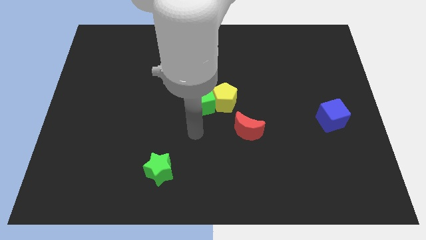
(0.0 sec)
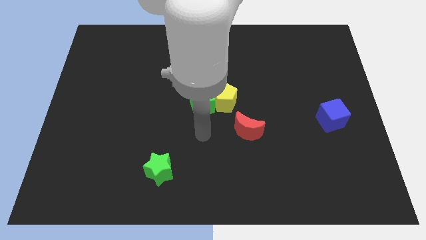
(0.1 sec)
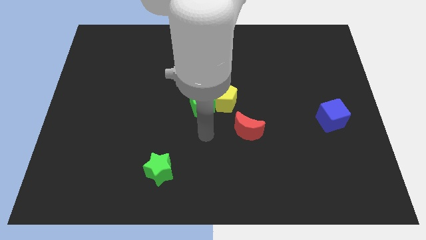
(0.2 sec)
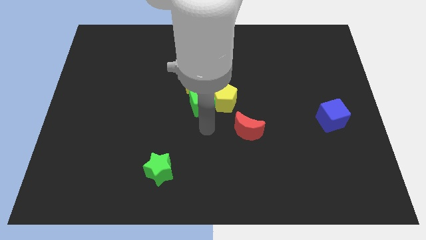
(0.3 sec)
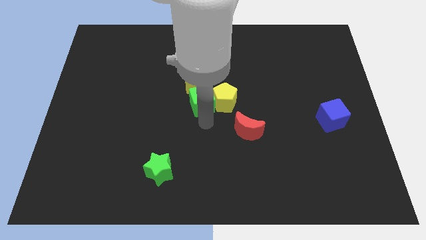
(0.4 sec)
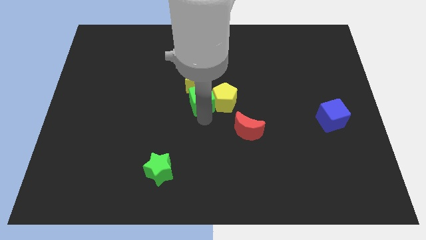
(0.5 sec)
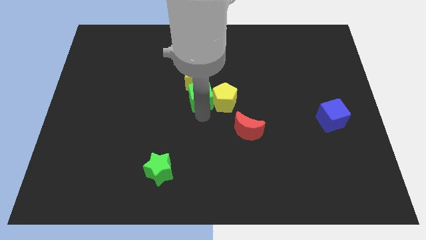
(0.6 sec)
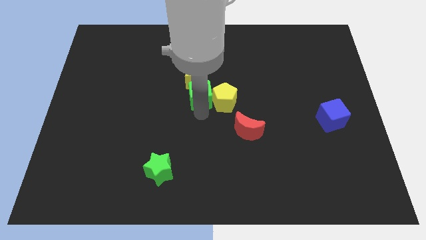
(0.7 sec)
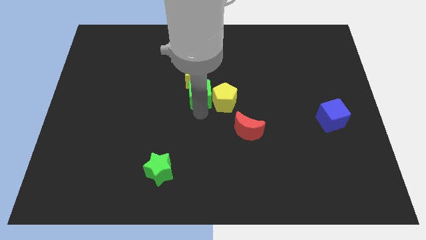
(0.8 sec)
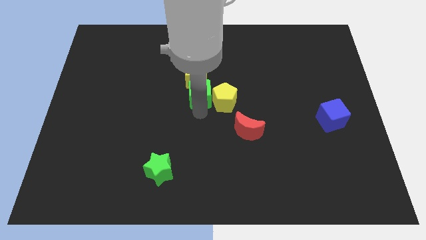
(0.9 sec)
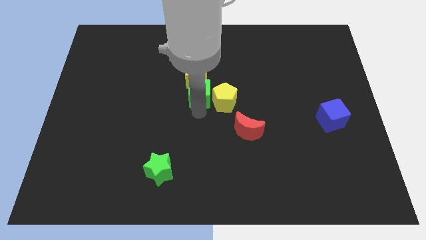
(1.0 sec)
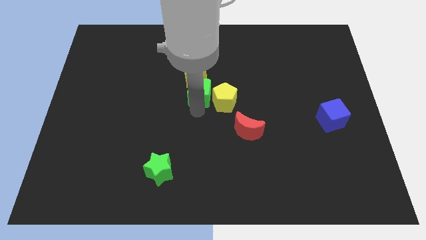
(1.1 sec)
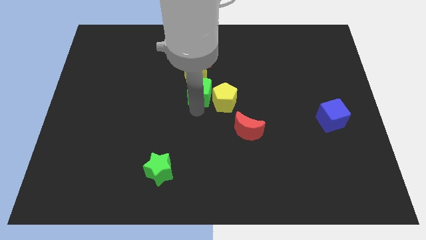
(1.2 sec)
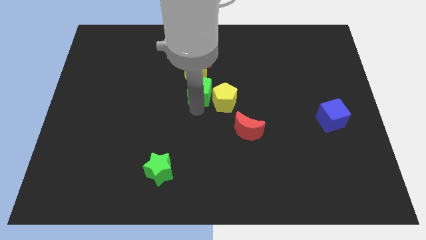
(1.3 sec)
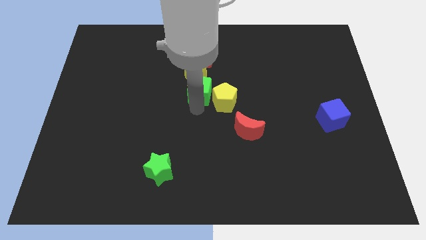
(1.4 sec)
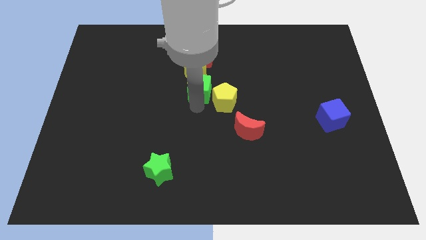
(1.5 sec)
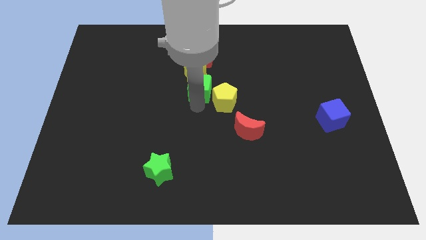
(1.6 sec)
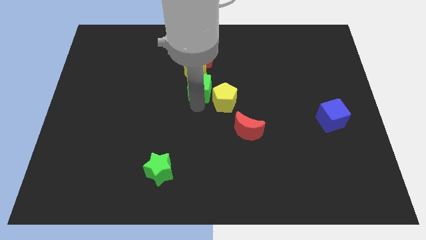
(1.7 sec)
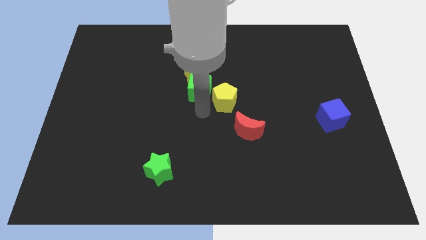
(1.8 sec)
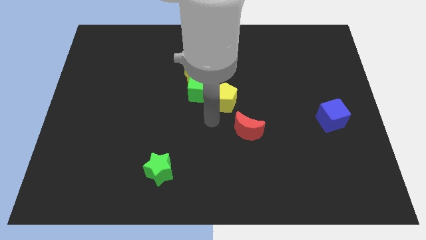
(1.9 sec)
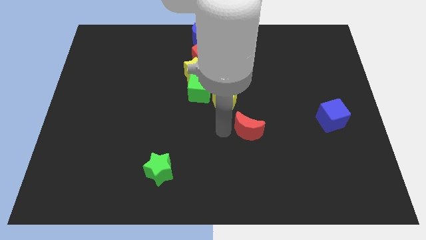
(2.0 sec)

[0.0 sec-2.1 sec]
push the green cube into the yellow star

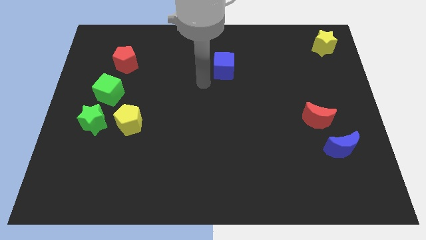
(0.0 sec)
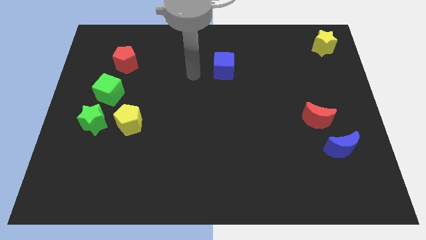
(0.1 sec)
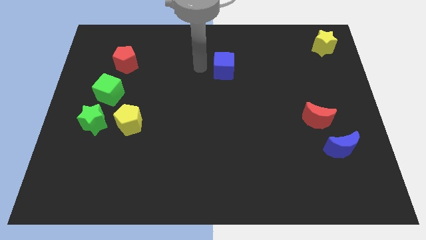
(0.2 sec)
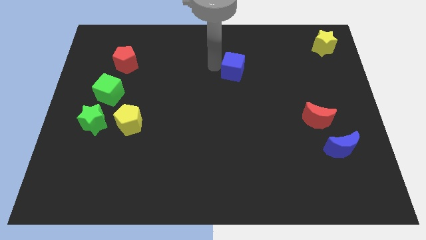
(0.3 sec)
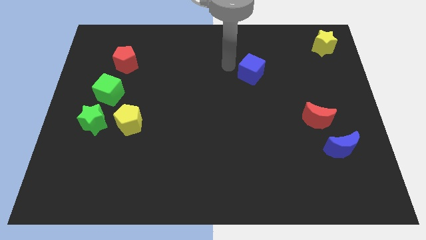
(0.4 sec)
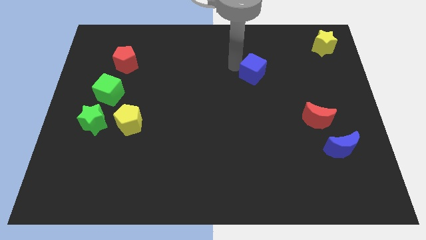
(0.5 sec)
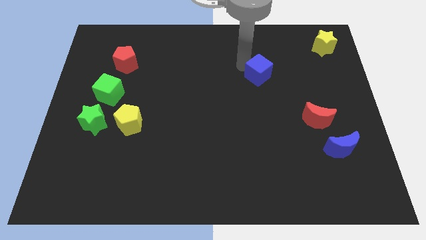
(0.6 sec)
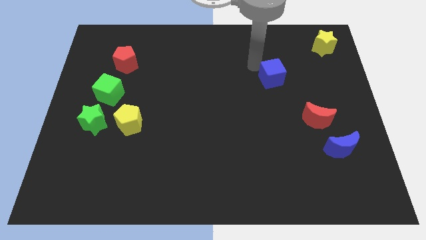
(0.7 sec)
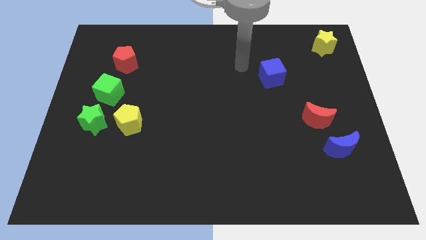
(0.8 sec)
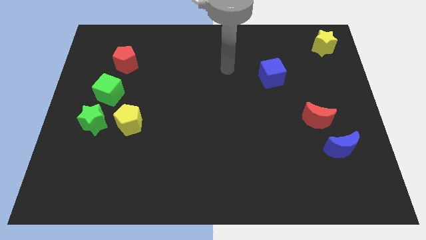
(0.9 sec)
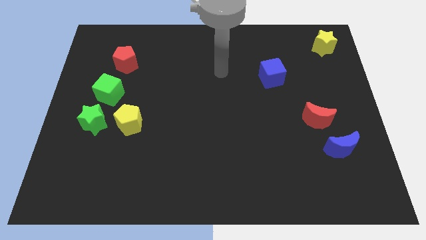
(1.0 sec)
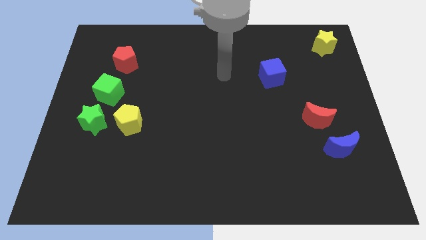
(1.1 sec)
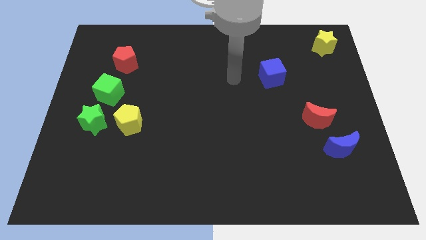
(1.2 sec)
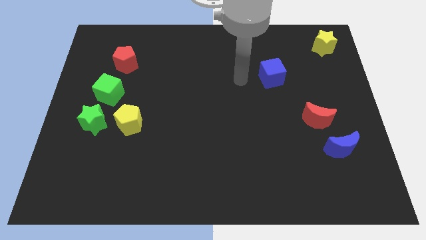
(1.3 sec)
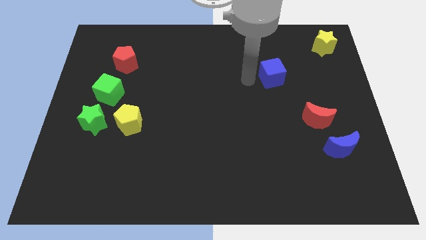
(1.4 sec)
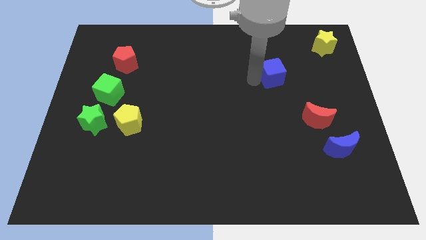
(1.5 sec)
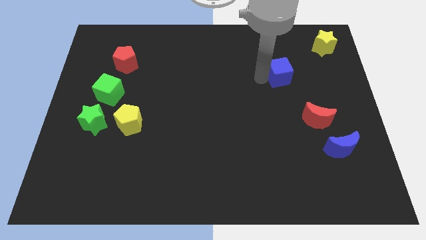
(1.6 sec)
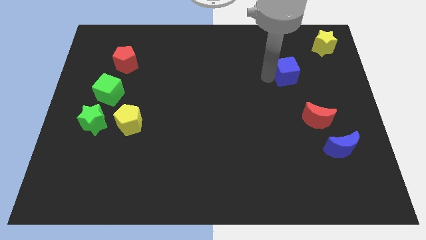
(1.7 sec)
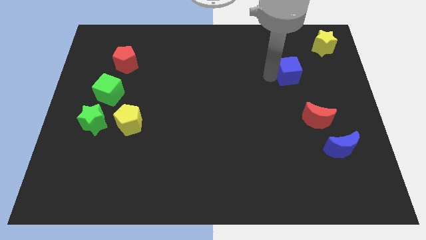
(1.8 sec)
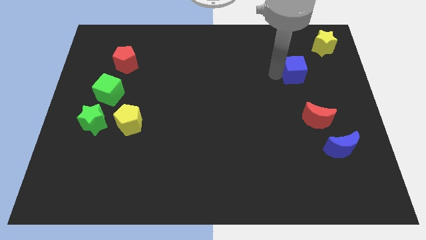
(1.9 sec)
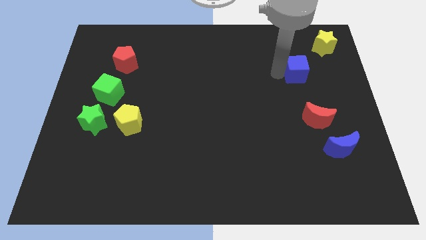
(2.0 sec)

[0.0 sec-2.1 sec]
push the blue cube towards the yellow star

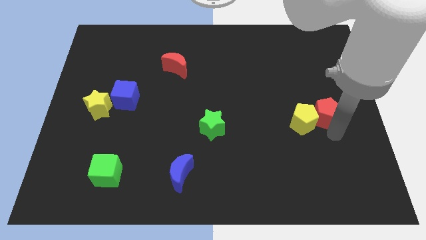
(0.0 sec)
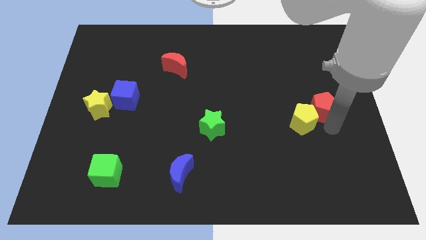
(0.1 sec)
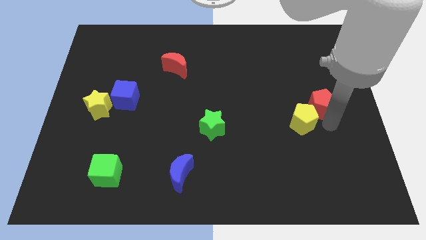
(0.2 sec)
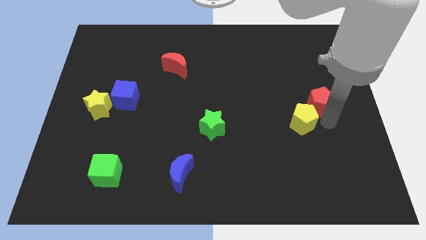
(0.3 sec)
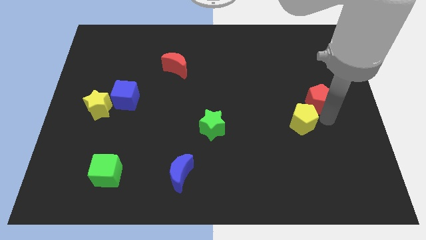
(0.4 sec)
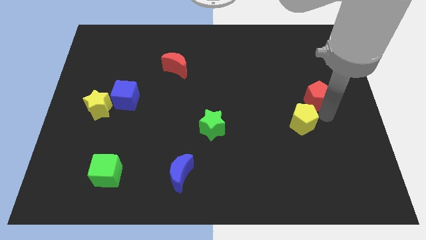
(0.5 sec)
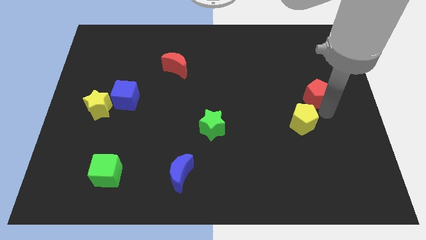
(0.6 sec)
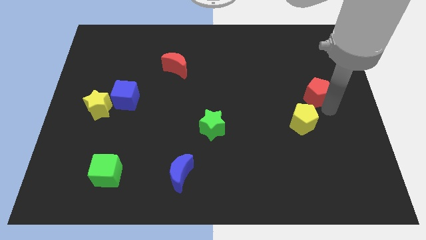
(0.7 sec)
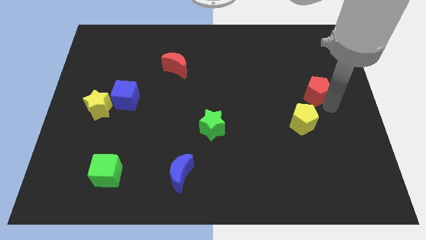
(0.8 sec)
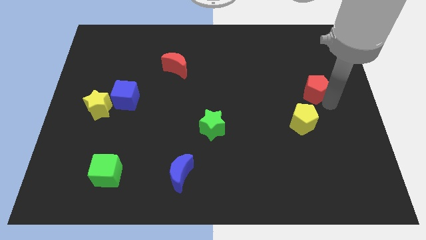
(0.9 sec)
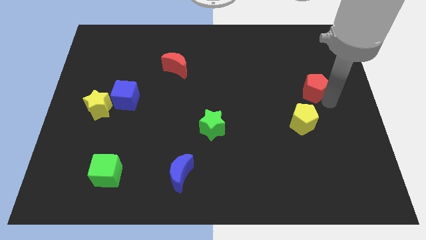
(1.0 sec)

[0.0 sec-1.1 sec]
drag the red pentagon slightly upwards

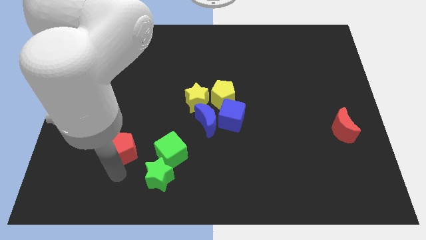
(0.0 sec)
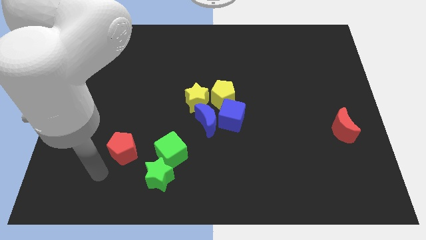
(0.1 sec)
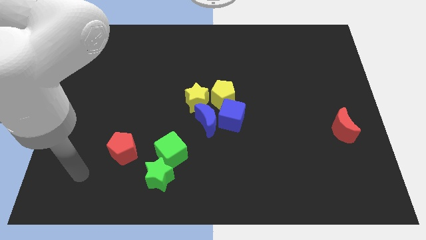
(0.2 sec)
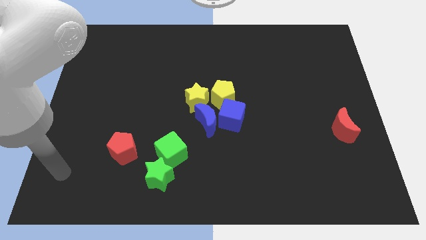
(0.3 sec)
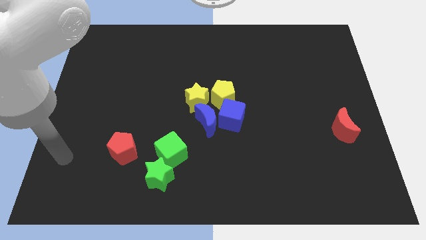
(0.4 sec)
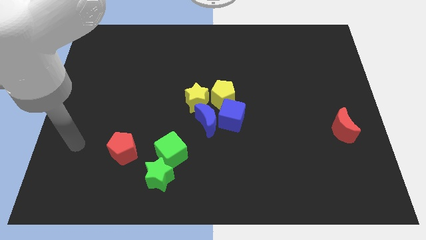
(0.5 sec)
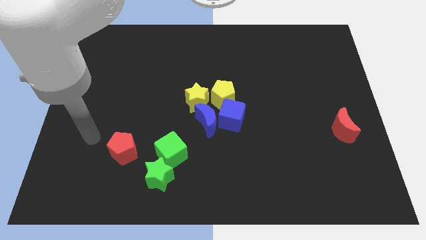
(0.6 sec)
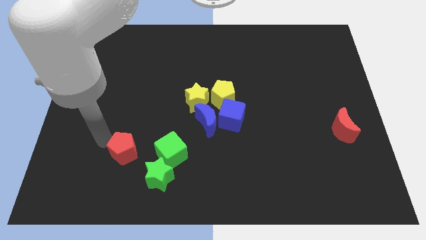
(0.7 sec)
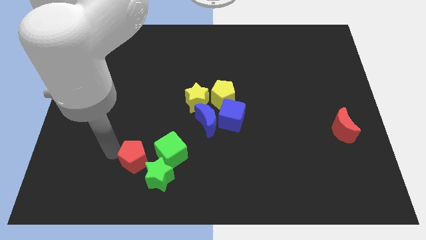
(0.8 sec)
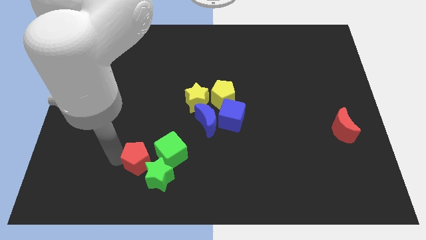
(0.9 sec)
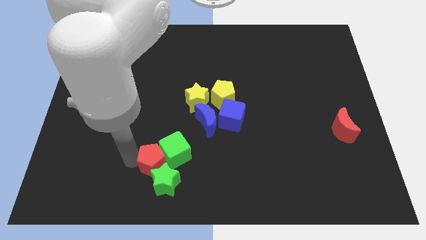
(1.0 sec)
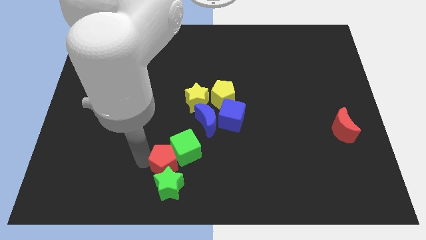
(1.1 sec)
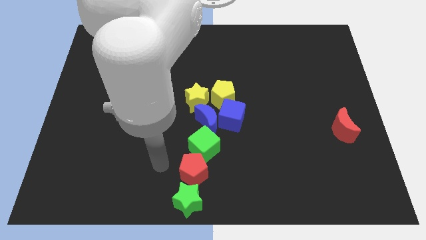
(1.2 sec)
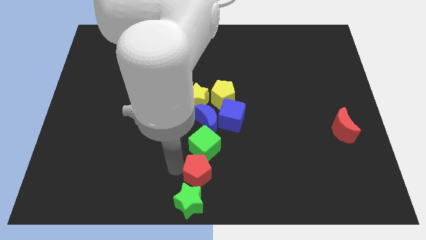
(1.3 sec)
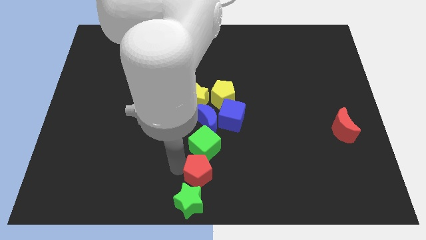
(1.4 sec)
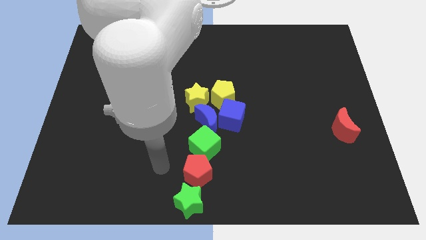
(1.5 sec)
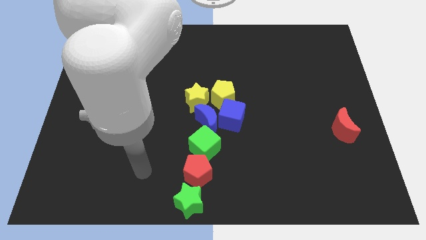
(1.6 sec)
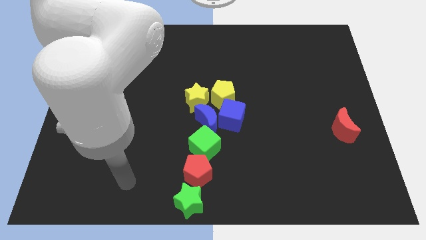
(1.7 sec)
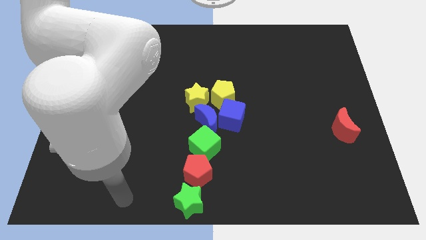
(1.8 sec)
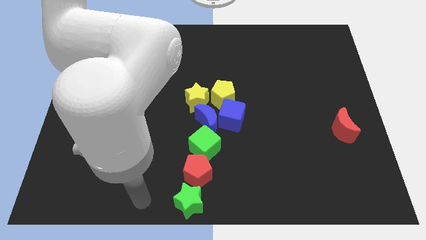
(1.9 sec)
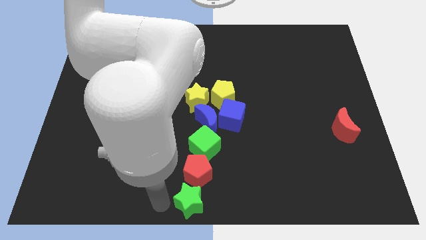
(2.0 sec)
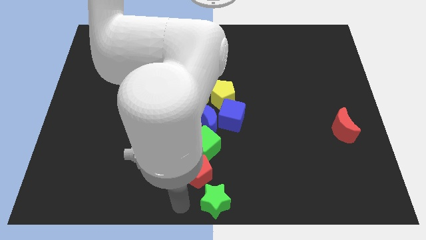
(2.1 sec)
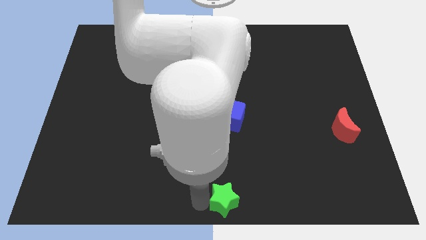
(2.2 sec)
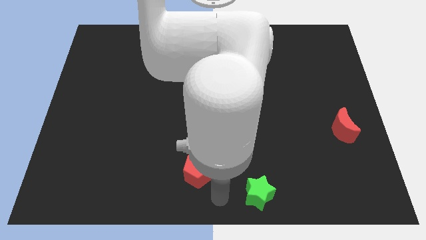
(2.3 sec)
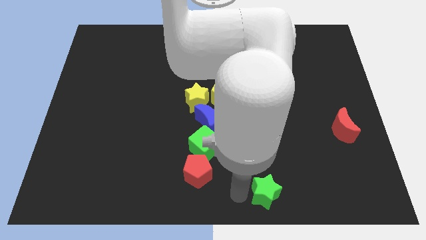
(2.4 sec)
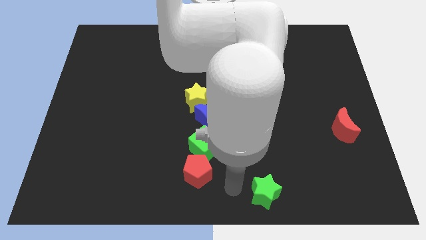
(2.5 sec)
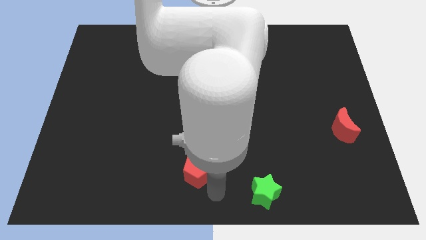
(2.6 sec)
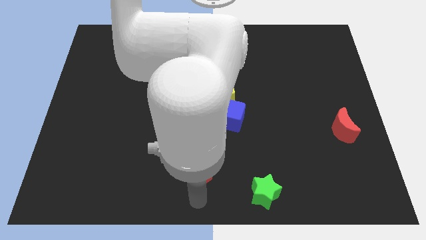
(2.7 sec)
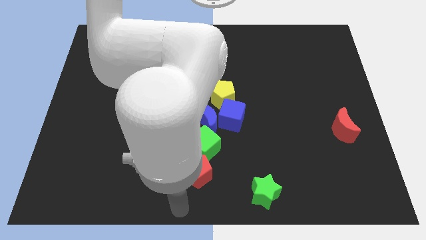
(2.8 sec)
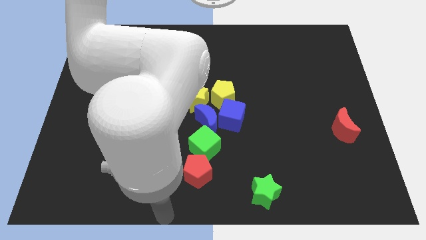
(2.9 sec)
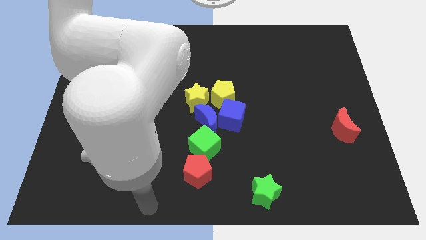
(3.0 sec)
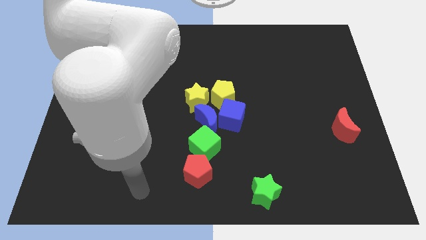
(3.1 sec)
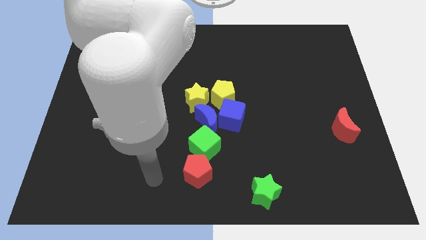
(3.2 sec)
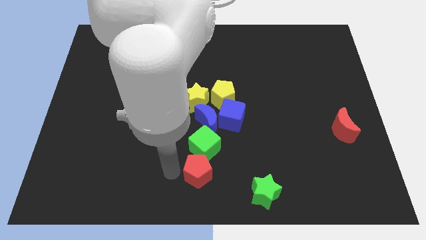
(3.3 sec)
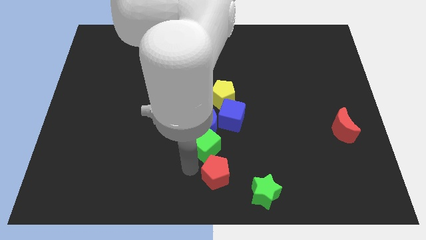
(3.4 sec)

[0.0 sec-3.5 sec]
place the green star diagonally to the green cube
